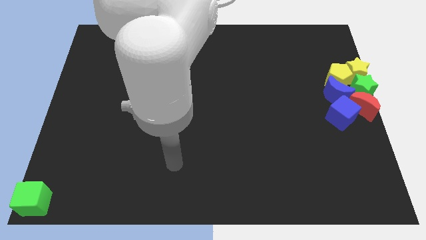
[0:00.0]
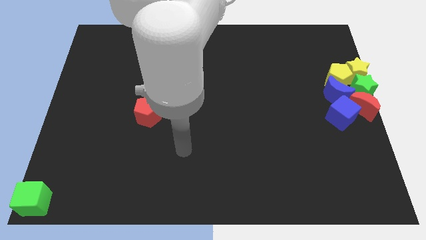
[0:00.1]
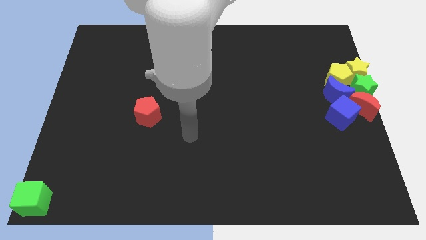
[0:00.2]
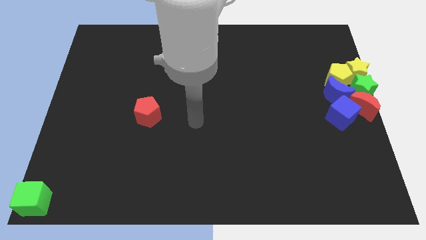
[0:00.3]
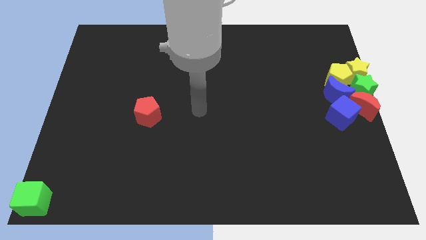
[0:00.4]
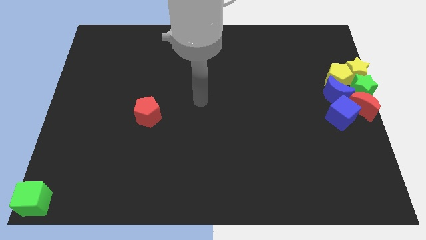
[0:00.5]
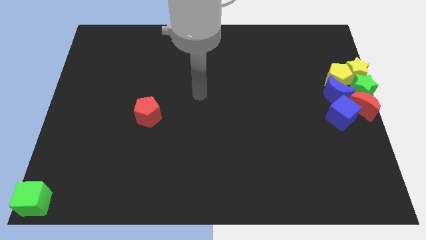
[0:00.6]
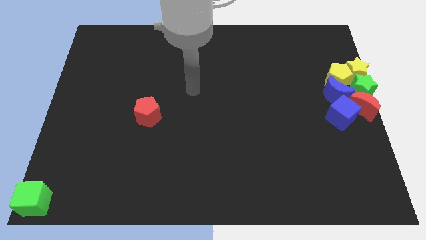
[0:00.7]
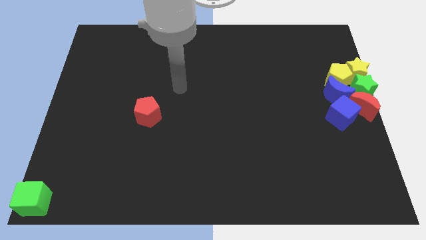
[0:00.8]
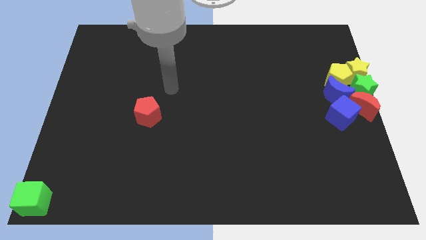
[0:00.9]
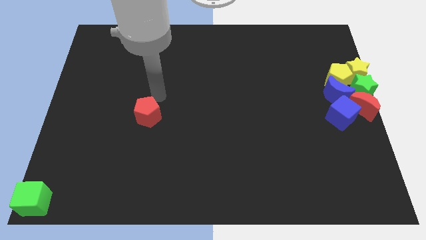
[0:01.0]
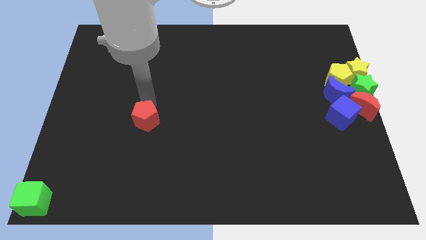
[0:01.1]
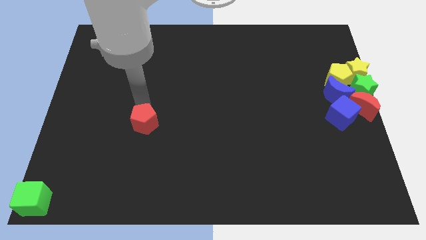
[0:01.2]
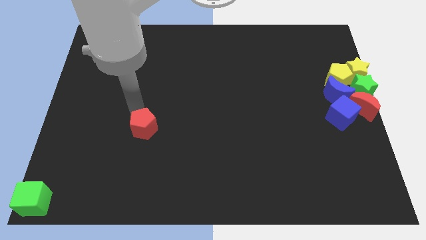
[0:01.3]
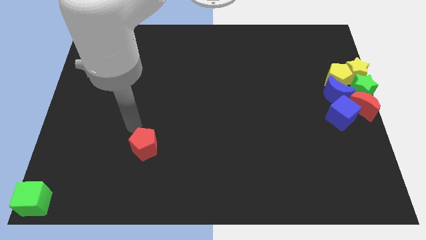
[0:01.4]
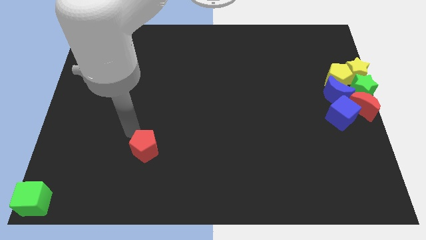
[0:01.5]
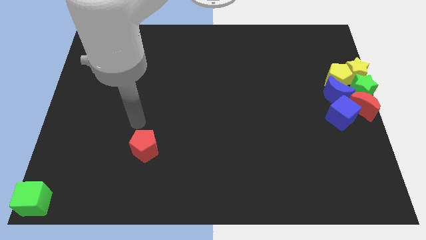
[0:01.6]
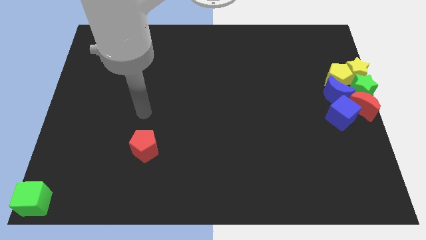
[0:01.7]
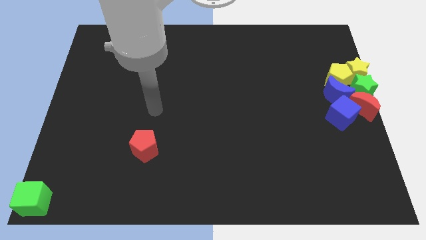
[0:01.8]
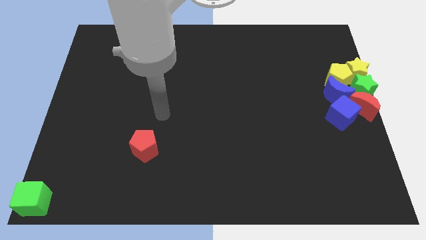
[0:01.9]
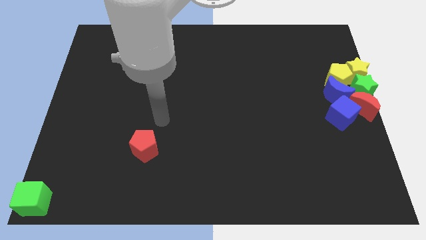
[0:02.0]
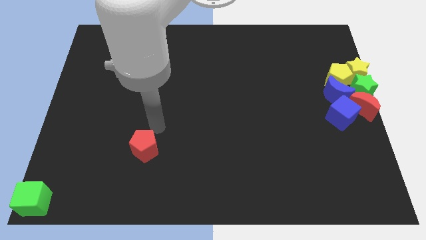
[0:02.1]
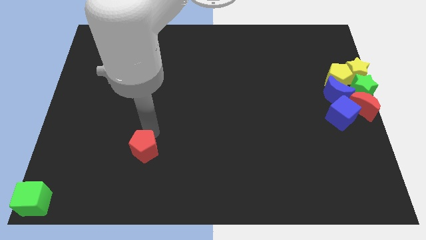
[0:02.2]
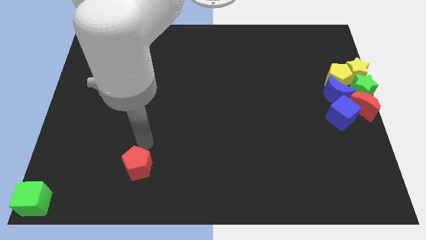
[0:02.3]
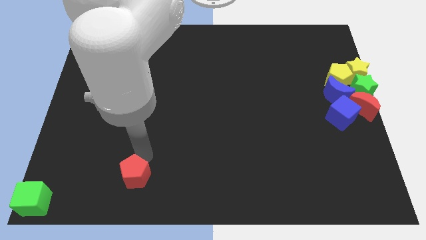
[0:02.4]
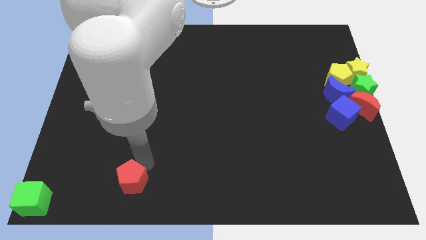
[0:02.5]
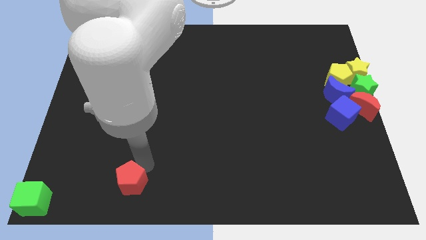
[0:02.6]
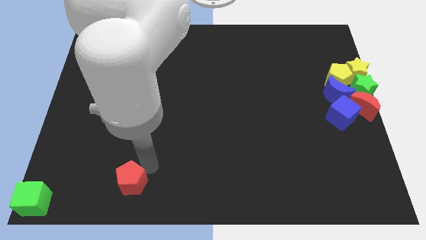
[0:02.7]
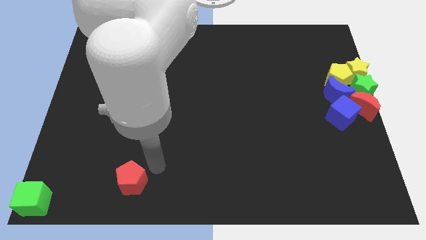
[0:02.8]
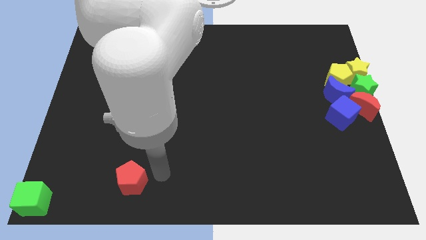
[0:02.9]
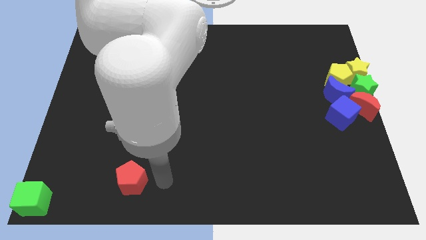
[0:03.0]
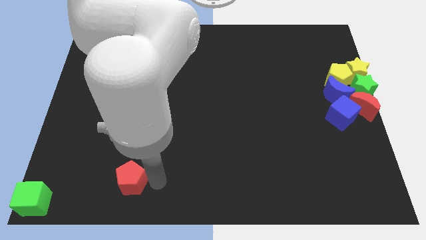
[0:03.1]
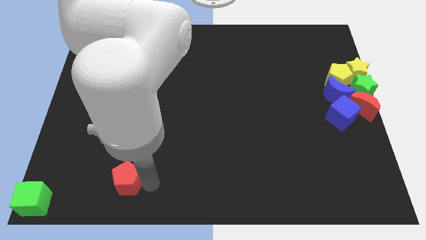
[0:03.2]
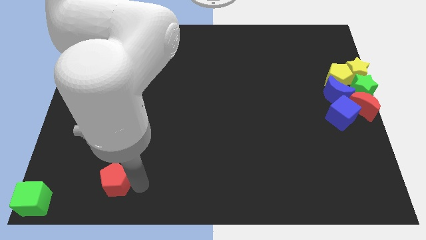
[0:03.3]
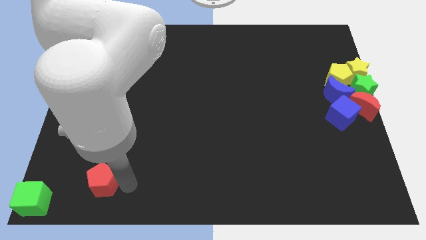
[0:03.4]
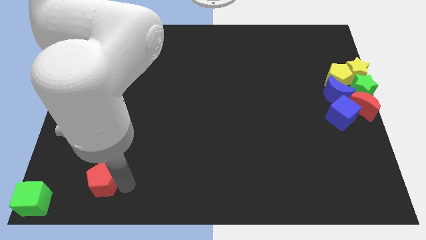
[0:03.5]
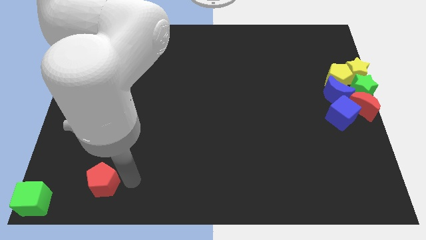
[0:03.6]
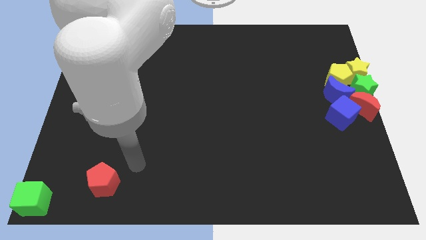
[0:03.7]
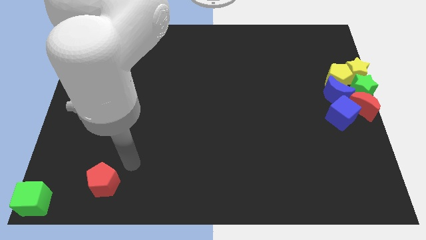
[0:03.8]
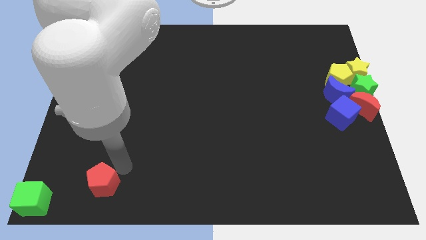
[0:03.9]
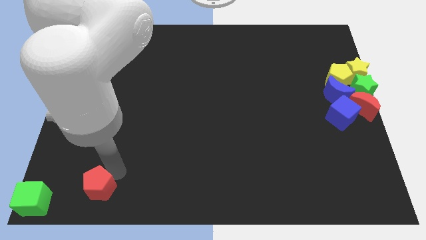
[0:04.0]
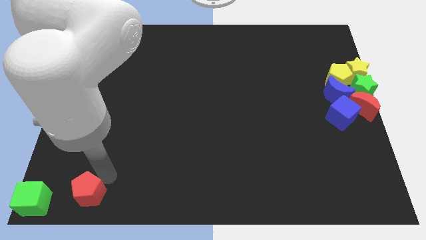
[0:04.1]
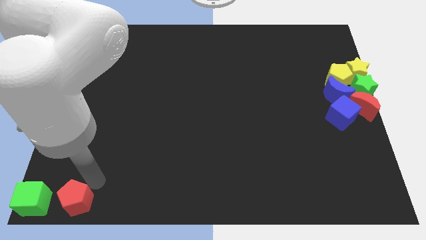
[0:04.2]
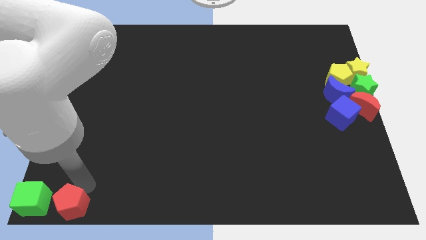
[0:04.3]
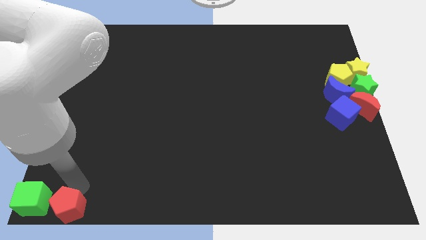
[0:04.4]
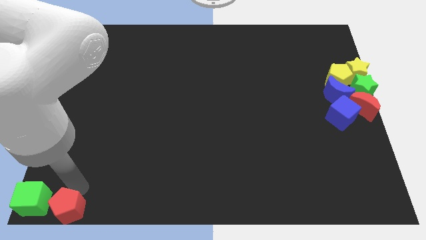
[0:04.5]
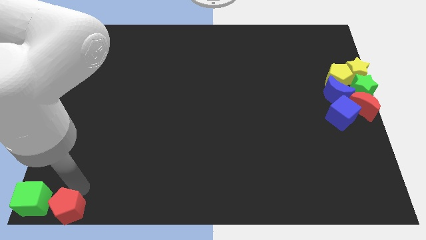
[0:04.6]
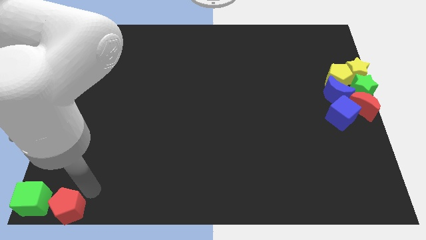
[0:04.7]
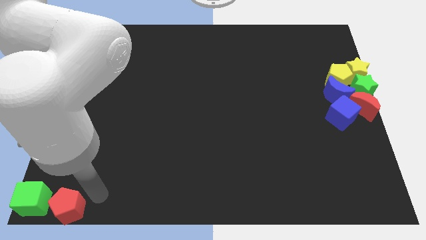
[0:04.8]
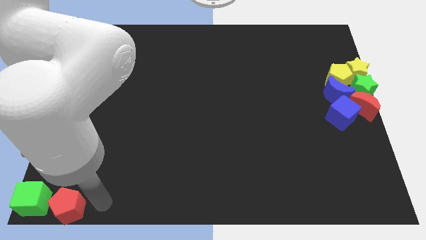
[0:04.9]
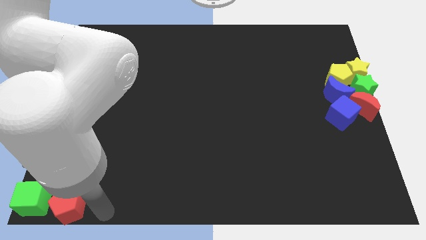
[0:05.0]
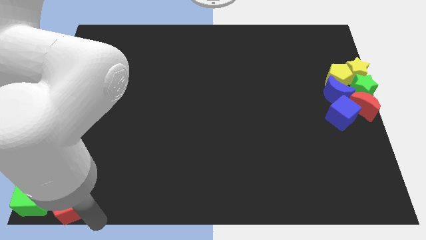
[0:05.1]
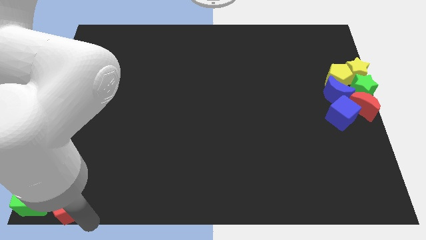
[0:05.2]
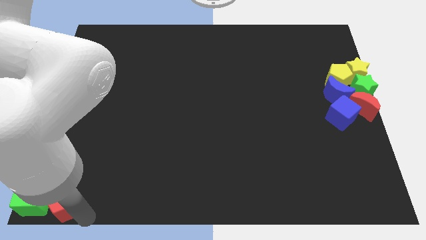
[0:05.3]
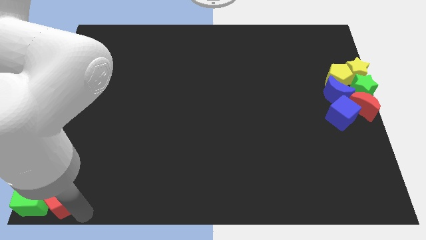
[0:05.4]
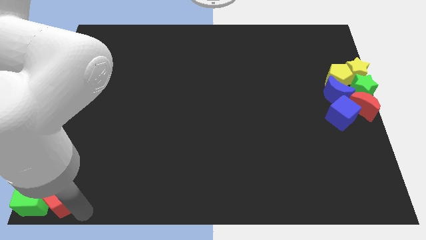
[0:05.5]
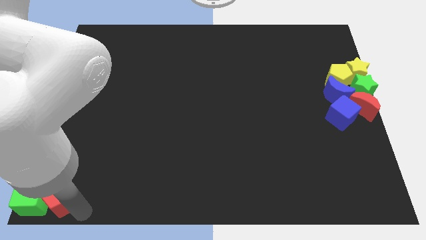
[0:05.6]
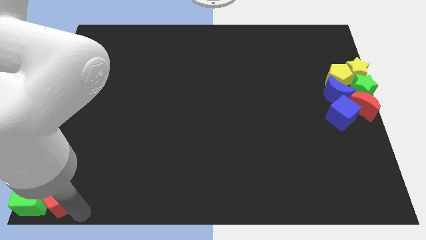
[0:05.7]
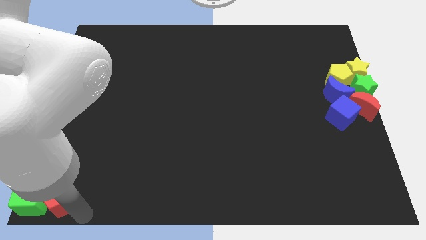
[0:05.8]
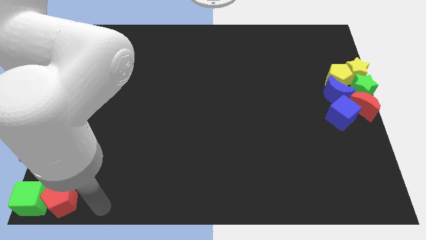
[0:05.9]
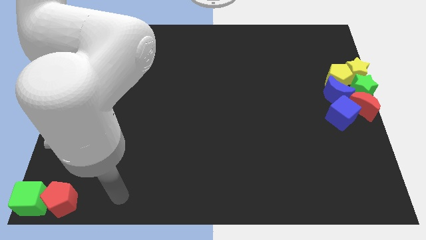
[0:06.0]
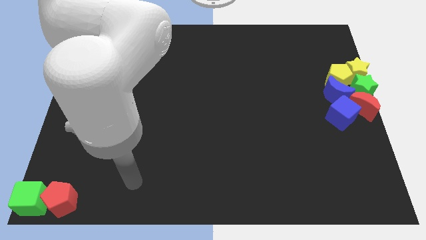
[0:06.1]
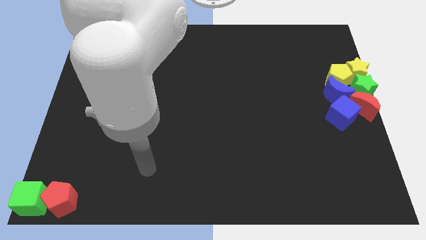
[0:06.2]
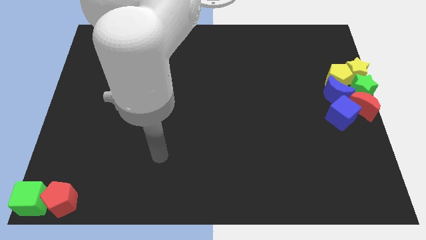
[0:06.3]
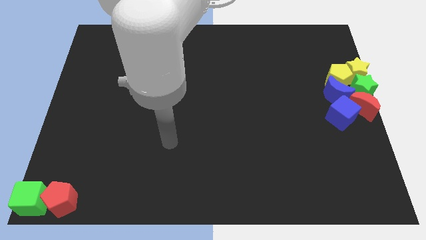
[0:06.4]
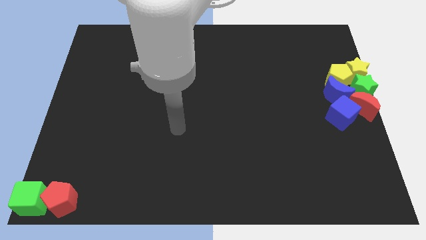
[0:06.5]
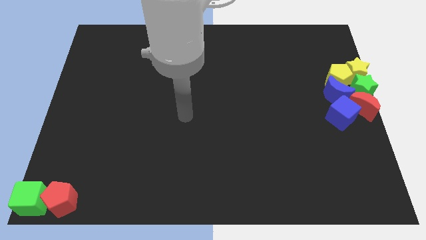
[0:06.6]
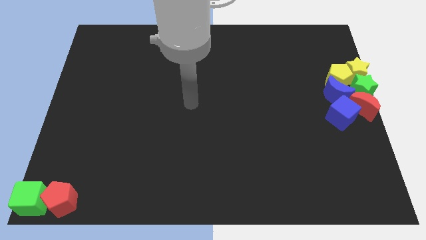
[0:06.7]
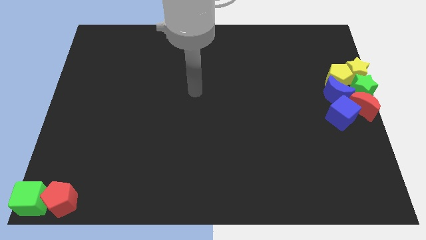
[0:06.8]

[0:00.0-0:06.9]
place red pentagon to the right of green cube

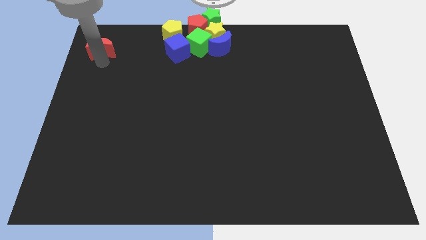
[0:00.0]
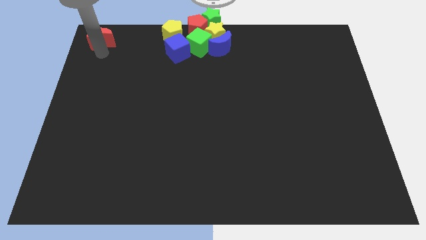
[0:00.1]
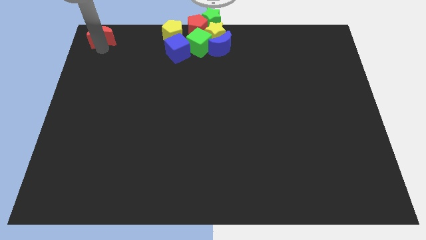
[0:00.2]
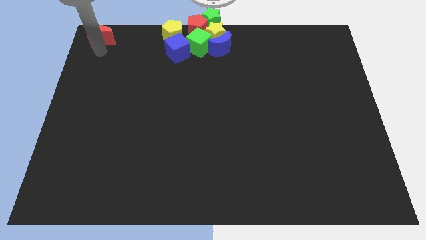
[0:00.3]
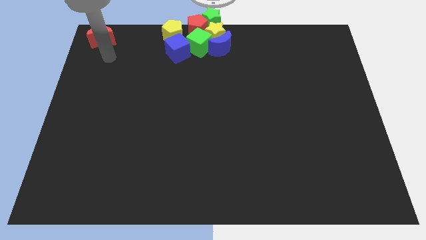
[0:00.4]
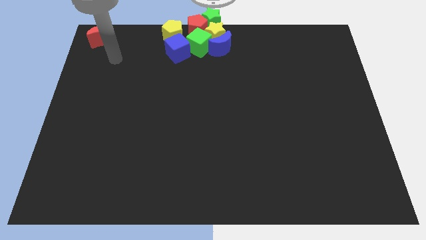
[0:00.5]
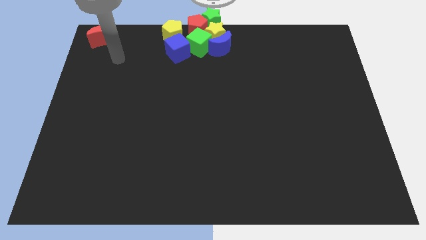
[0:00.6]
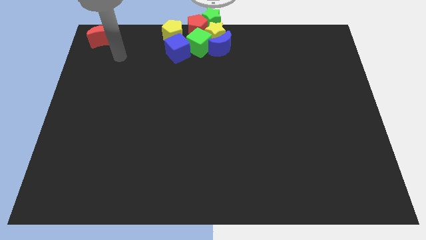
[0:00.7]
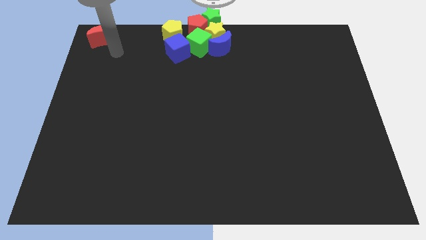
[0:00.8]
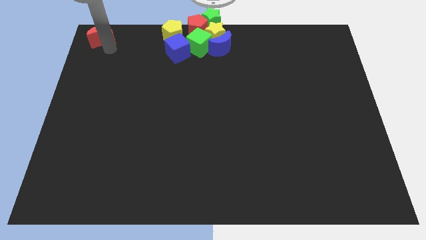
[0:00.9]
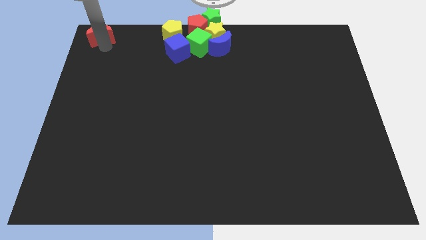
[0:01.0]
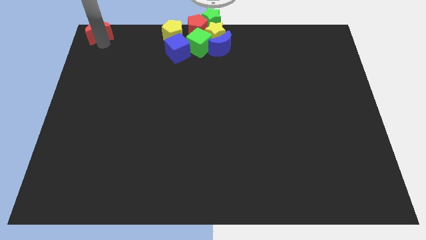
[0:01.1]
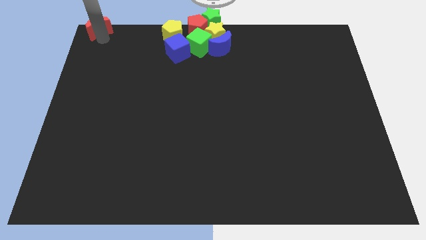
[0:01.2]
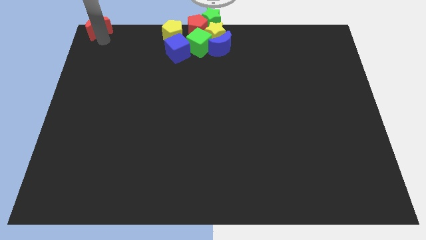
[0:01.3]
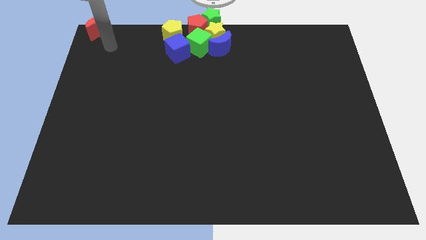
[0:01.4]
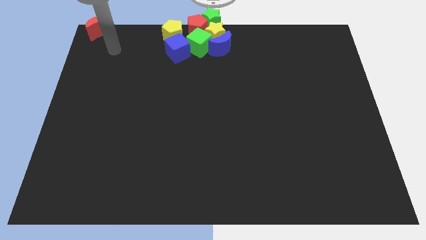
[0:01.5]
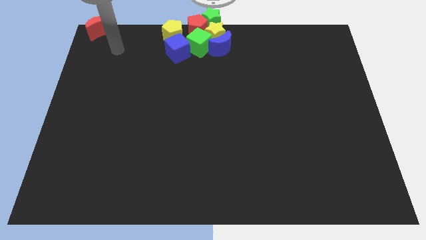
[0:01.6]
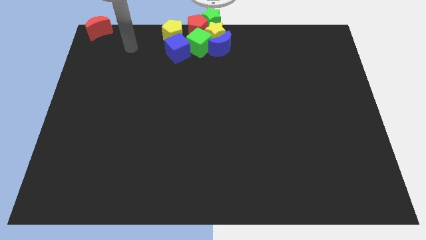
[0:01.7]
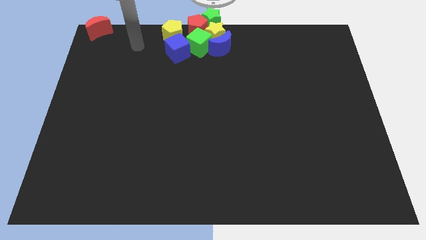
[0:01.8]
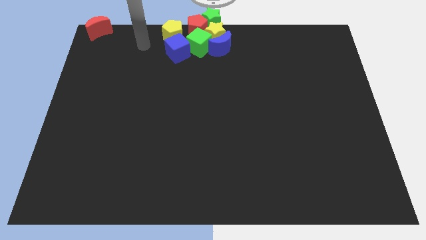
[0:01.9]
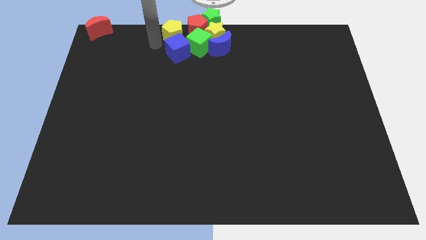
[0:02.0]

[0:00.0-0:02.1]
push red moon to the top left corner of the board

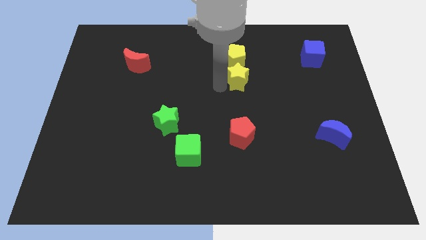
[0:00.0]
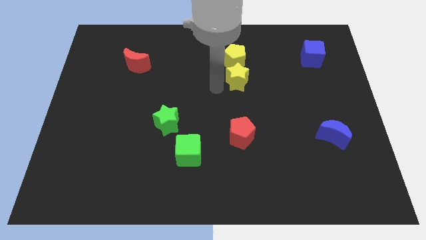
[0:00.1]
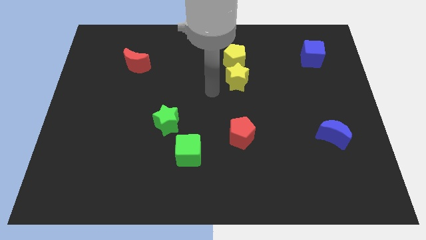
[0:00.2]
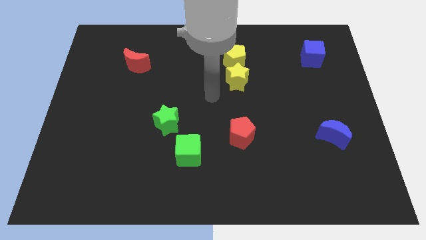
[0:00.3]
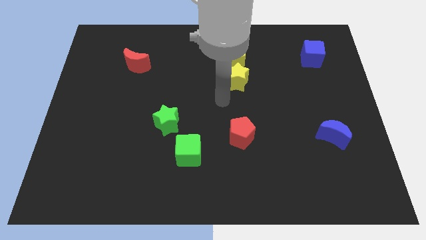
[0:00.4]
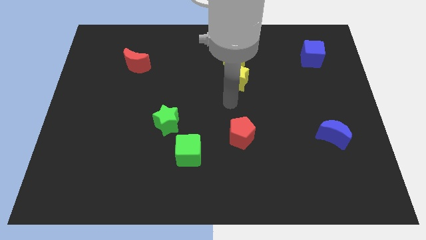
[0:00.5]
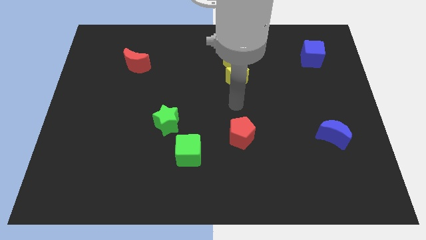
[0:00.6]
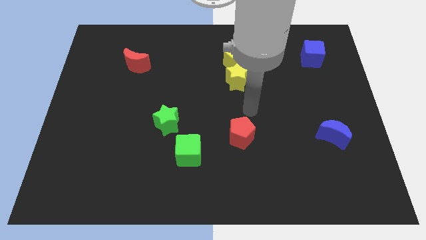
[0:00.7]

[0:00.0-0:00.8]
put arm in between yellow star and red pentagon
